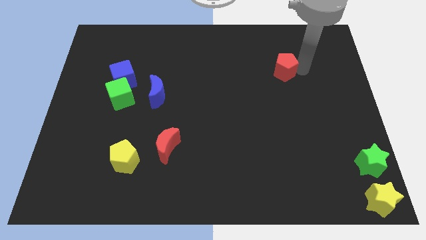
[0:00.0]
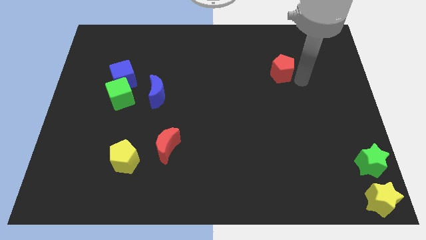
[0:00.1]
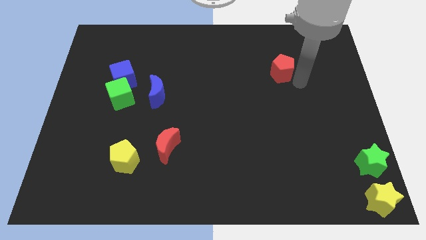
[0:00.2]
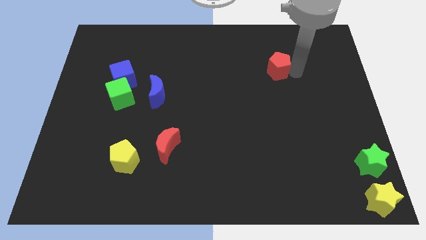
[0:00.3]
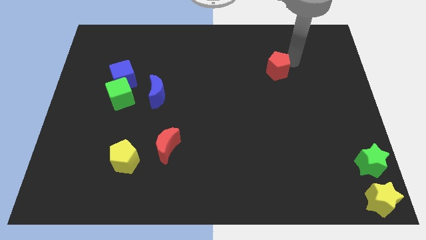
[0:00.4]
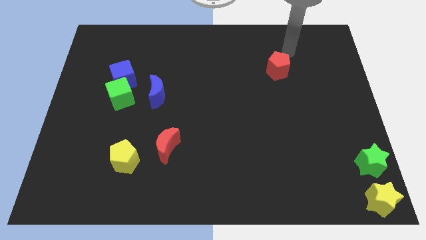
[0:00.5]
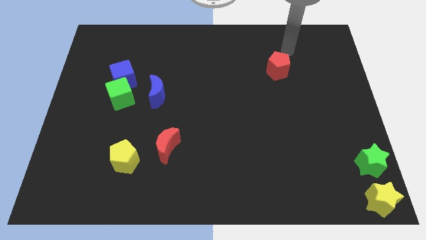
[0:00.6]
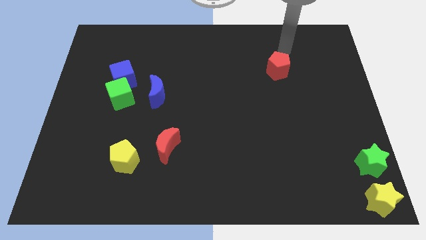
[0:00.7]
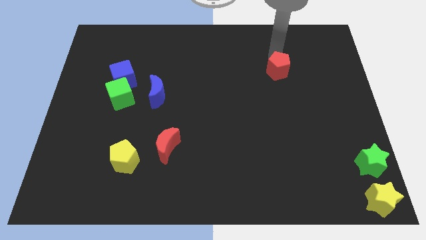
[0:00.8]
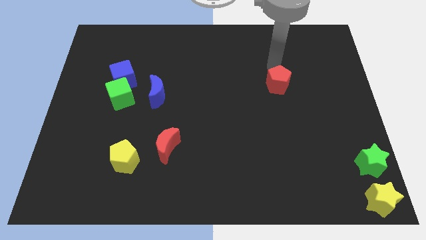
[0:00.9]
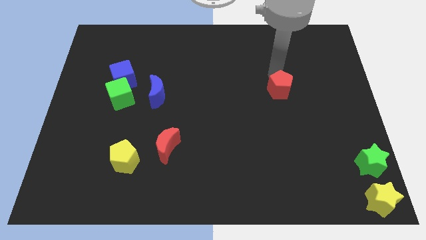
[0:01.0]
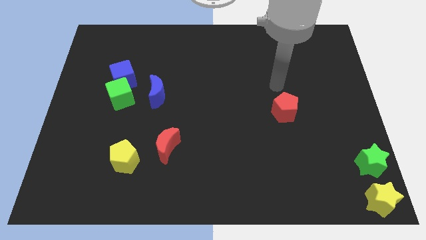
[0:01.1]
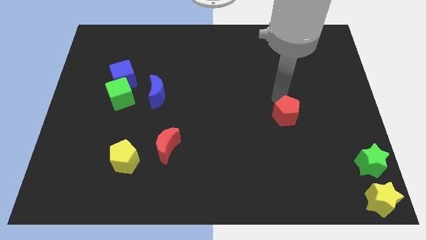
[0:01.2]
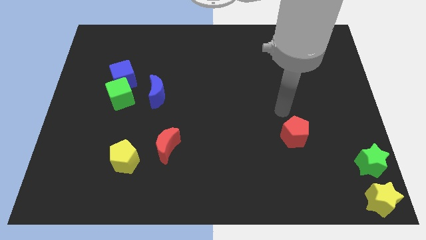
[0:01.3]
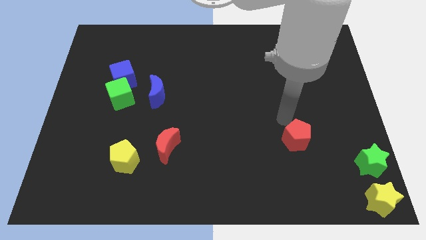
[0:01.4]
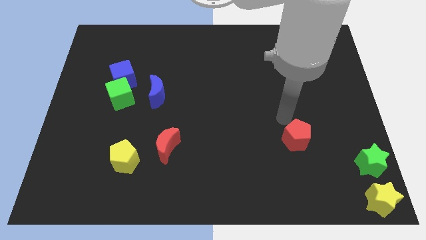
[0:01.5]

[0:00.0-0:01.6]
push the red pentagon to the bottom side of the board

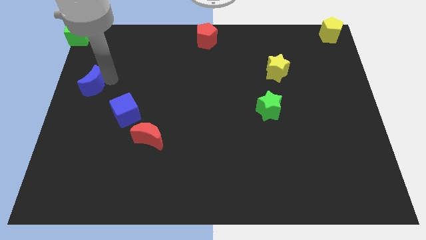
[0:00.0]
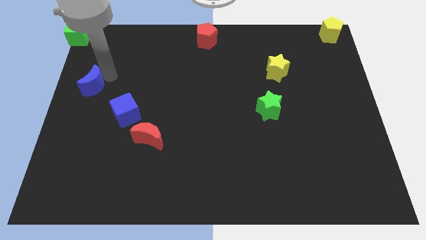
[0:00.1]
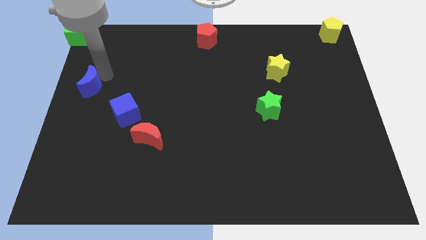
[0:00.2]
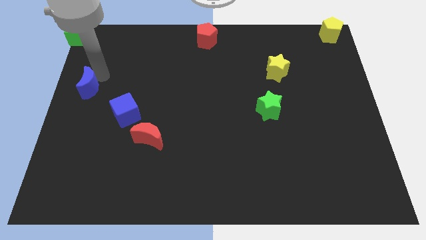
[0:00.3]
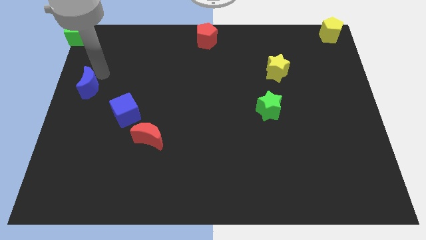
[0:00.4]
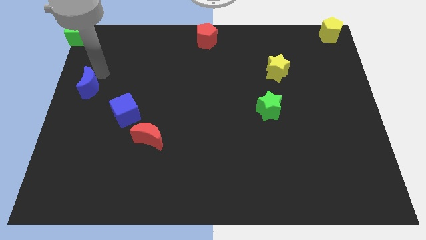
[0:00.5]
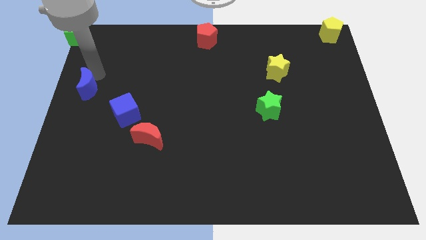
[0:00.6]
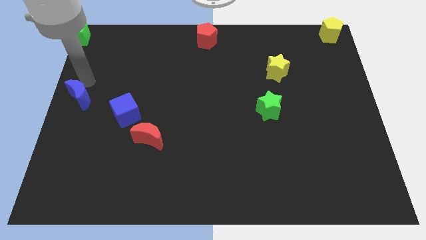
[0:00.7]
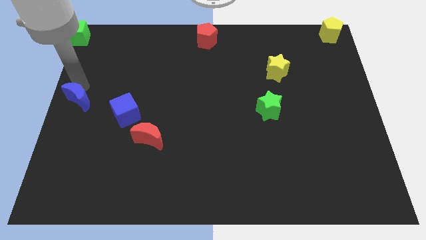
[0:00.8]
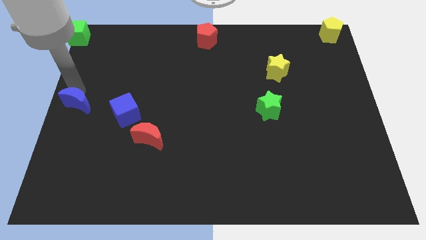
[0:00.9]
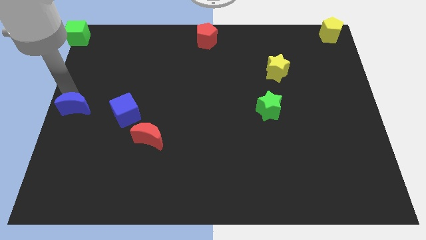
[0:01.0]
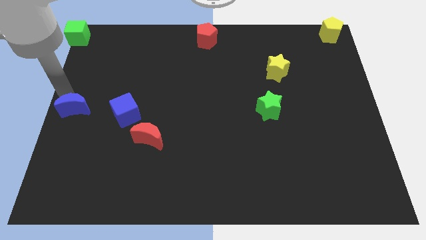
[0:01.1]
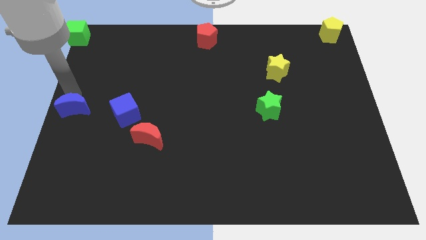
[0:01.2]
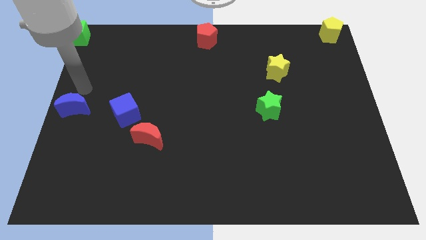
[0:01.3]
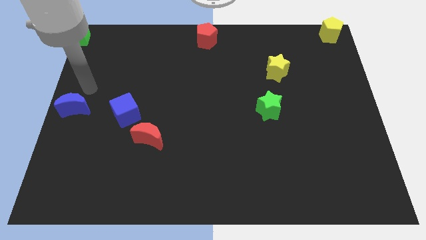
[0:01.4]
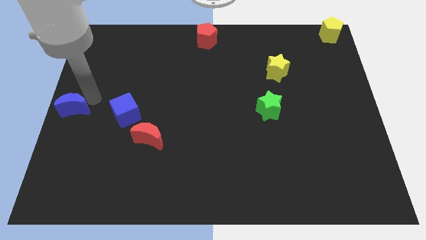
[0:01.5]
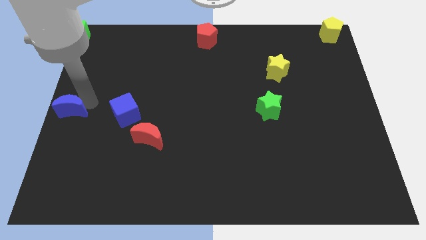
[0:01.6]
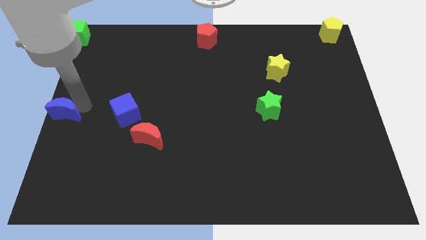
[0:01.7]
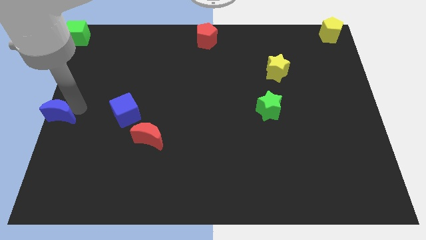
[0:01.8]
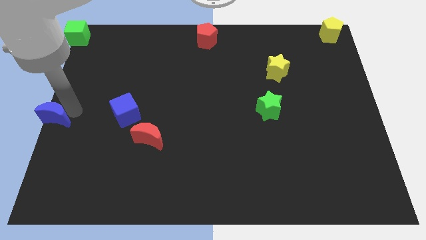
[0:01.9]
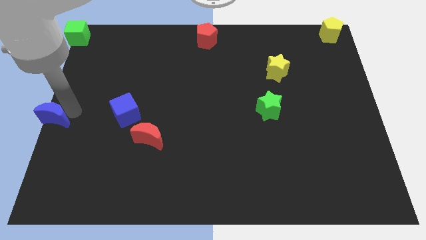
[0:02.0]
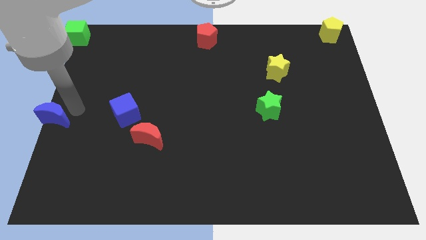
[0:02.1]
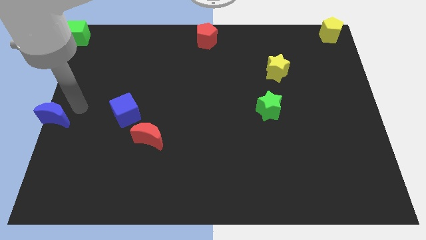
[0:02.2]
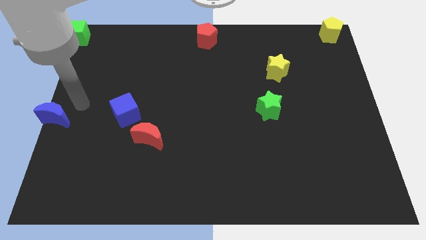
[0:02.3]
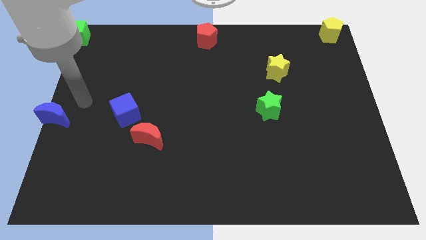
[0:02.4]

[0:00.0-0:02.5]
move the blue moon to the middle left of the board

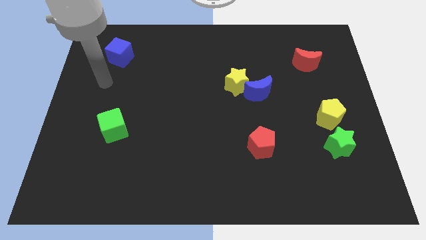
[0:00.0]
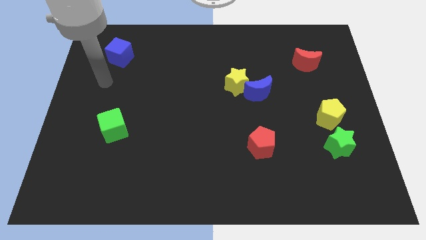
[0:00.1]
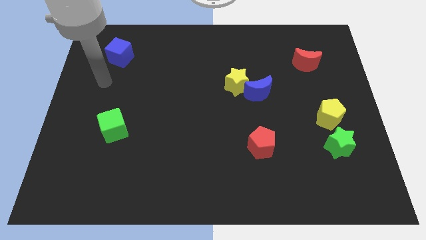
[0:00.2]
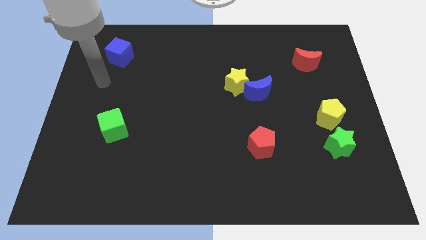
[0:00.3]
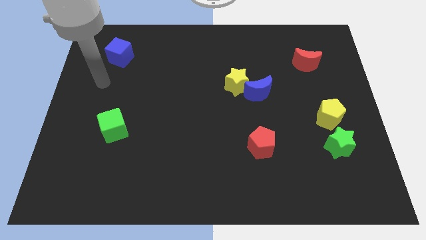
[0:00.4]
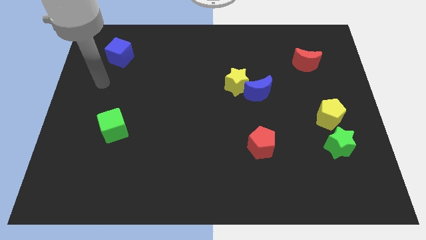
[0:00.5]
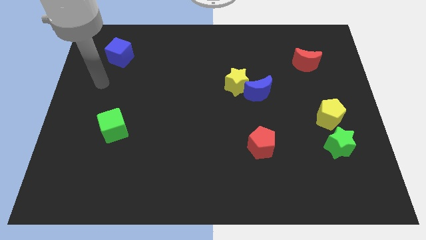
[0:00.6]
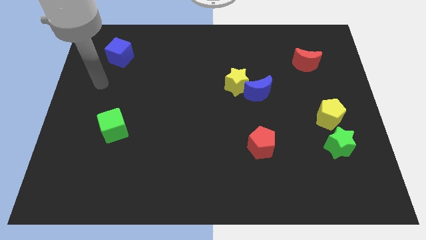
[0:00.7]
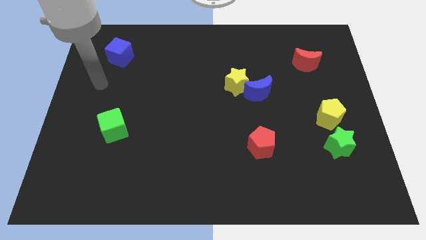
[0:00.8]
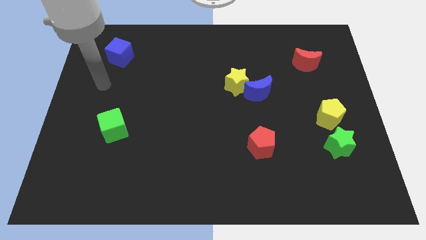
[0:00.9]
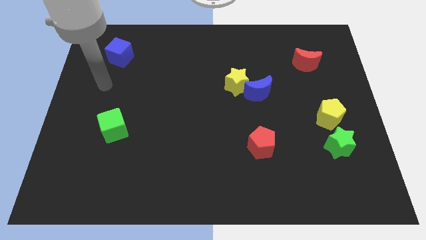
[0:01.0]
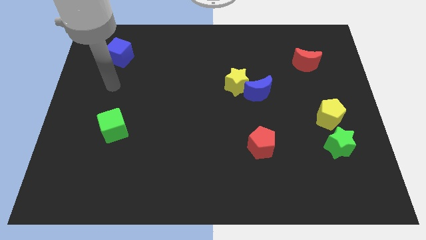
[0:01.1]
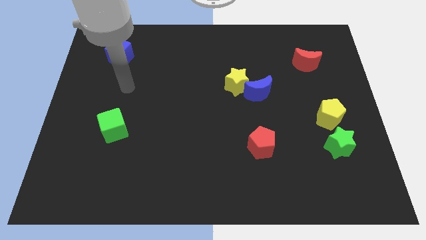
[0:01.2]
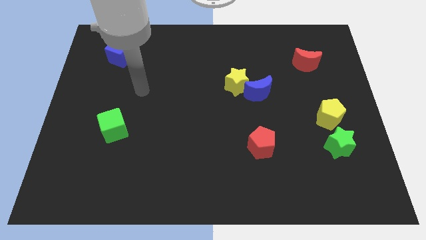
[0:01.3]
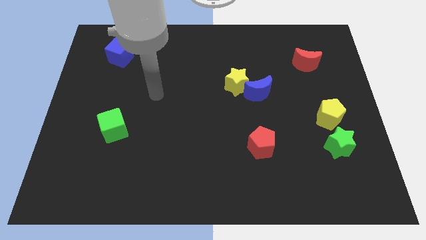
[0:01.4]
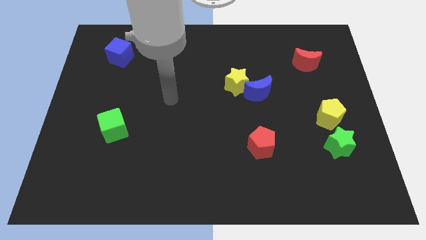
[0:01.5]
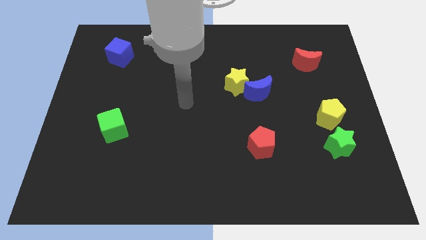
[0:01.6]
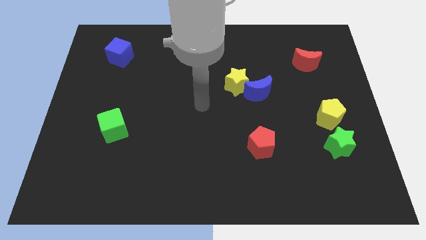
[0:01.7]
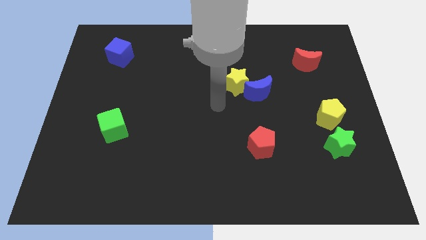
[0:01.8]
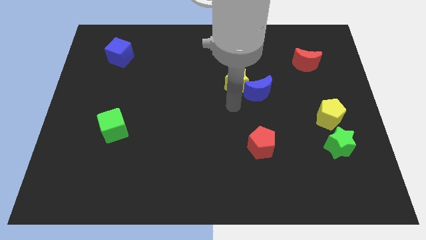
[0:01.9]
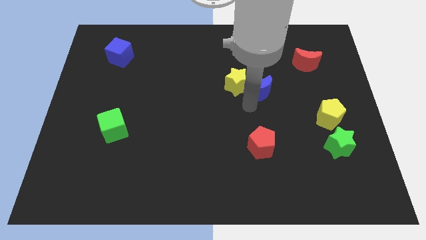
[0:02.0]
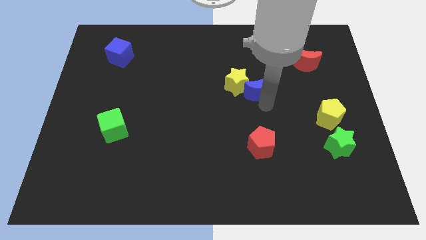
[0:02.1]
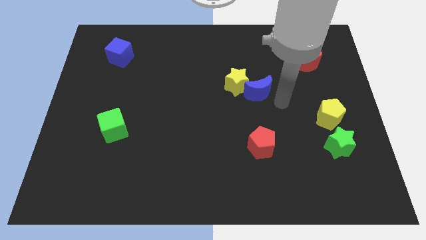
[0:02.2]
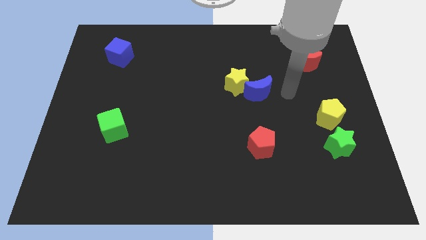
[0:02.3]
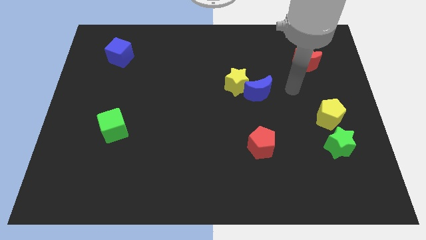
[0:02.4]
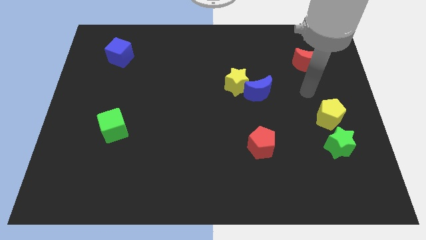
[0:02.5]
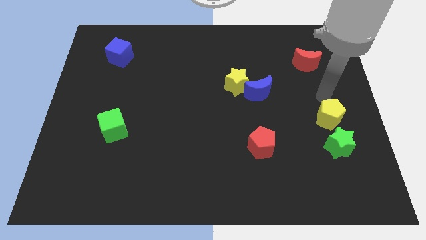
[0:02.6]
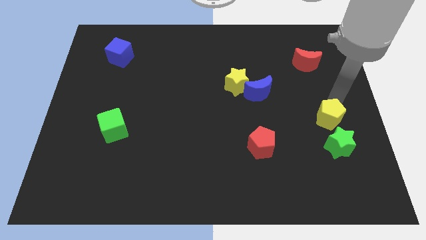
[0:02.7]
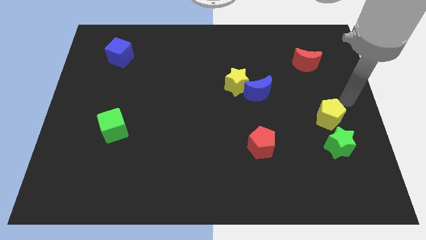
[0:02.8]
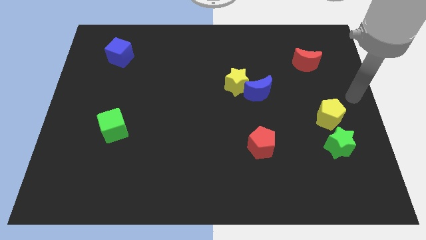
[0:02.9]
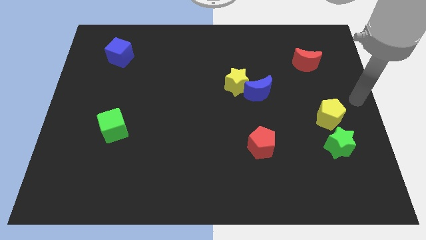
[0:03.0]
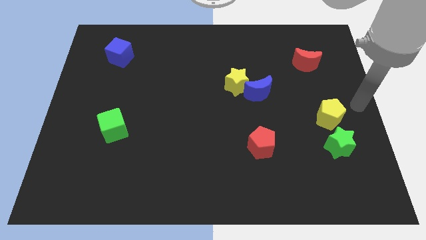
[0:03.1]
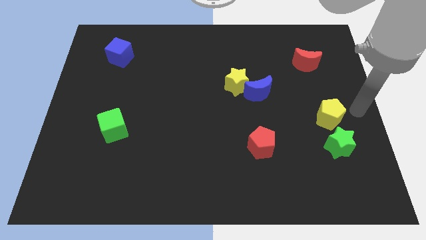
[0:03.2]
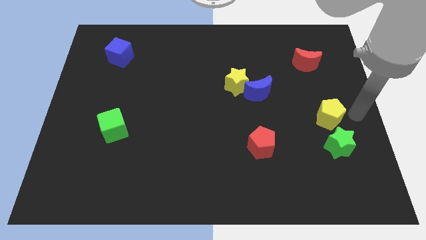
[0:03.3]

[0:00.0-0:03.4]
place your hand at right side of the yellow pentagon

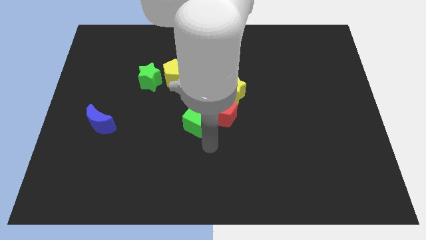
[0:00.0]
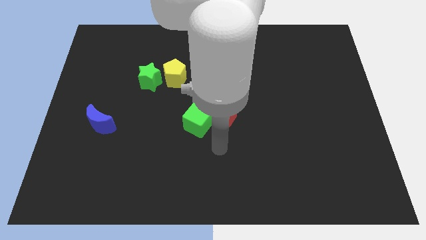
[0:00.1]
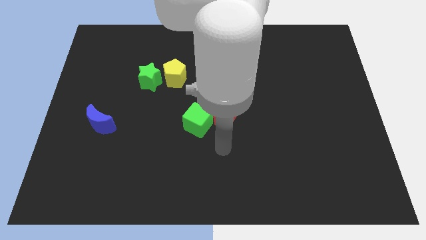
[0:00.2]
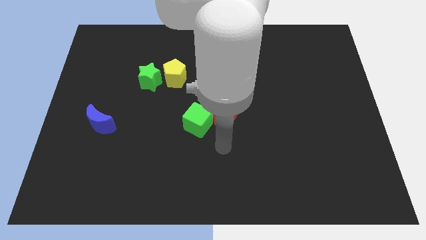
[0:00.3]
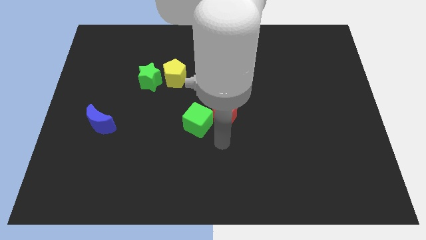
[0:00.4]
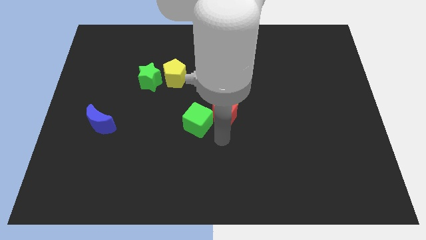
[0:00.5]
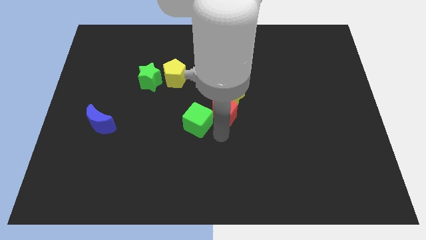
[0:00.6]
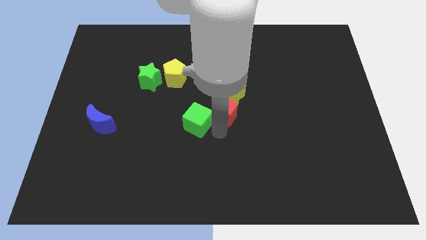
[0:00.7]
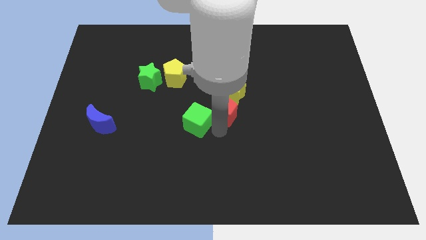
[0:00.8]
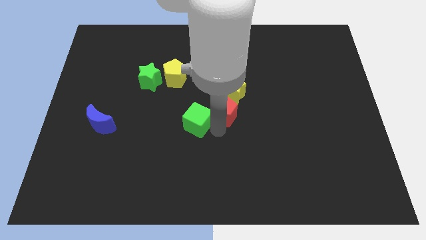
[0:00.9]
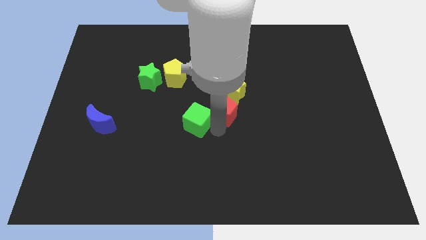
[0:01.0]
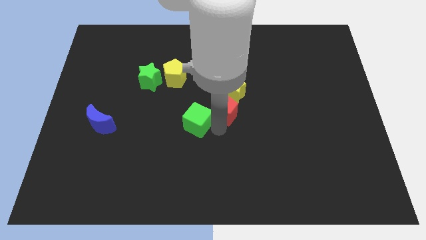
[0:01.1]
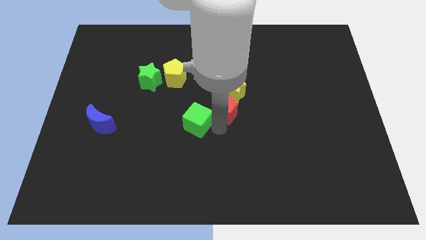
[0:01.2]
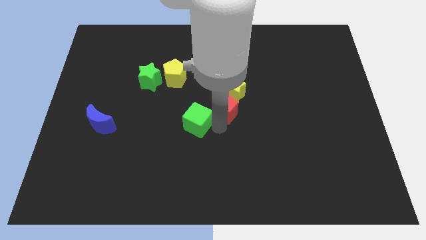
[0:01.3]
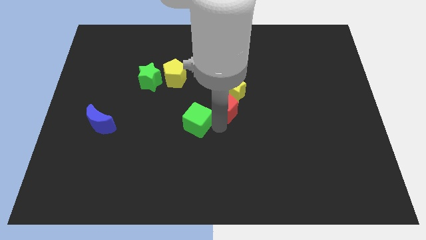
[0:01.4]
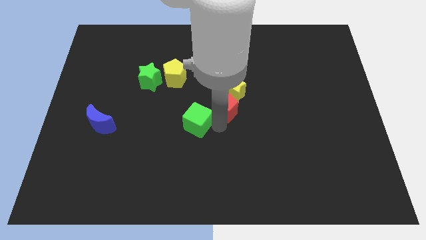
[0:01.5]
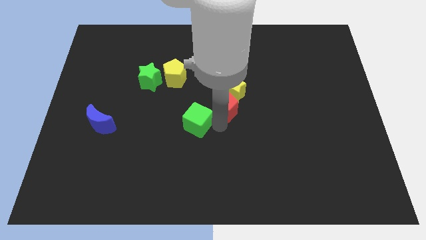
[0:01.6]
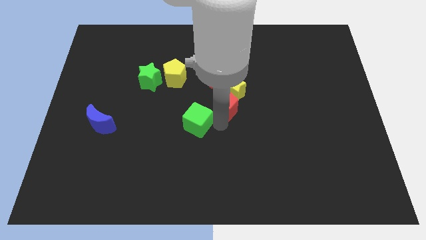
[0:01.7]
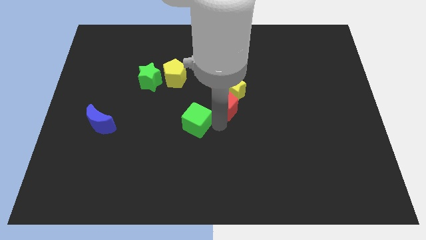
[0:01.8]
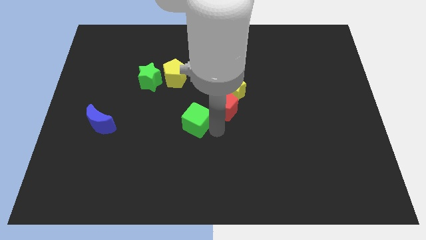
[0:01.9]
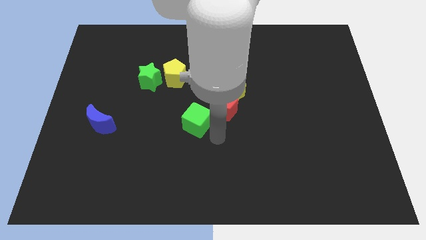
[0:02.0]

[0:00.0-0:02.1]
put the red pentagon to the bottom of the yellow star
